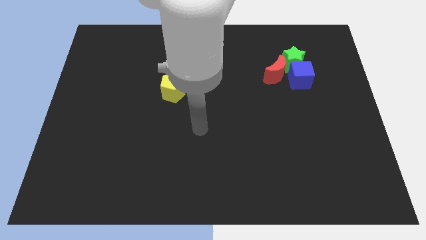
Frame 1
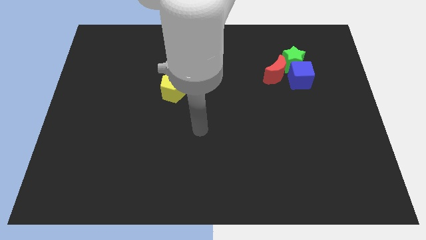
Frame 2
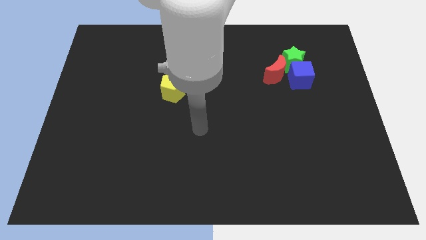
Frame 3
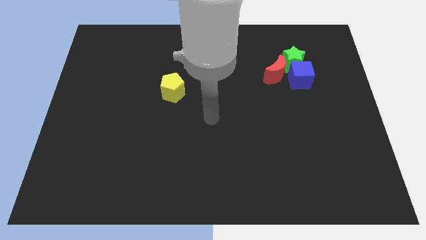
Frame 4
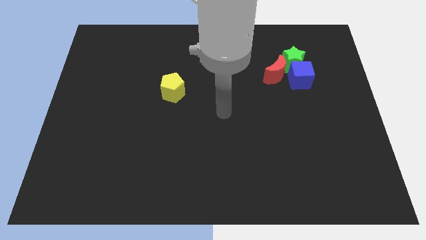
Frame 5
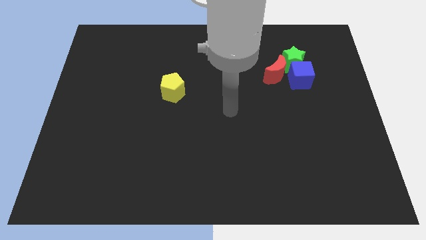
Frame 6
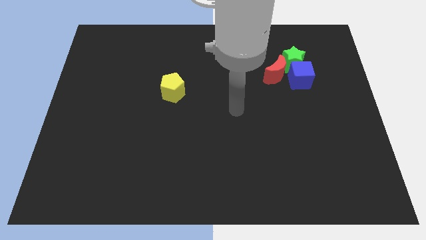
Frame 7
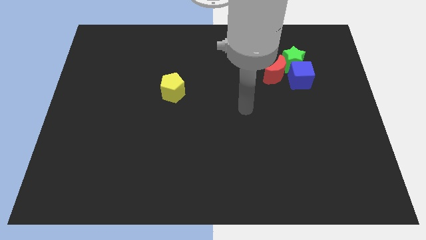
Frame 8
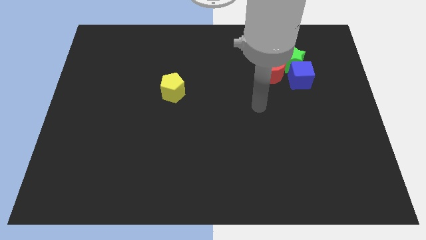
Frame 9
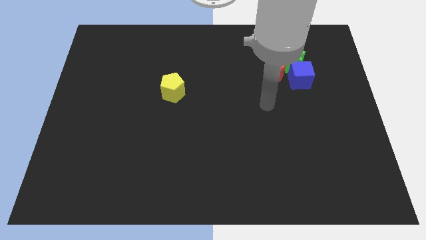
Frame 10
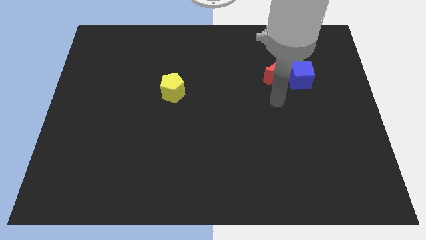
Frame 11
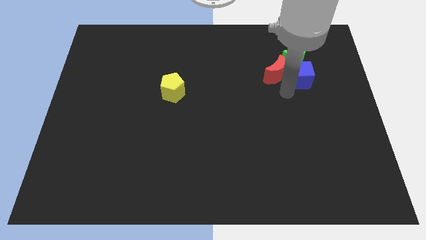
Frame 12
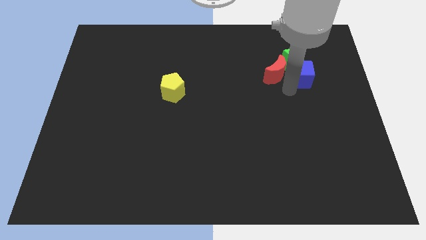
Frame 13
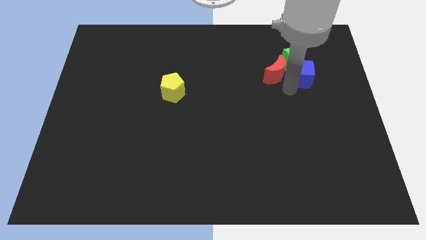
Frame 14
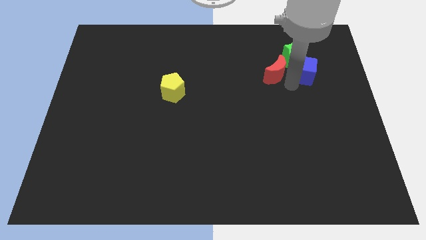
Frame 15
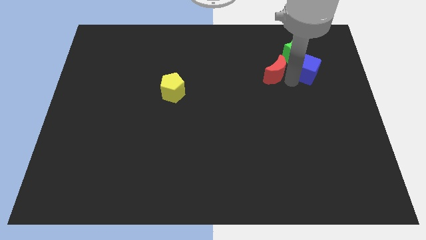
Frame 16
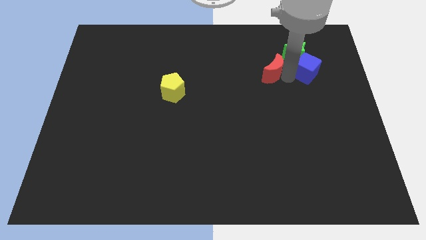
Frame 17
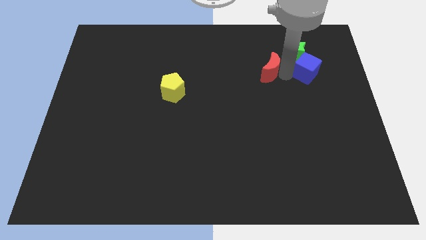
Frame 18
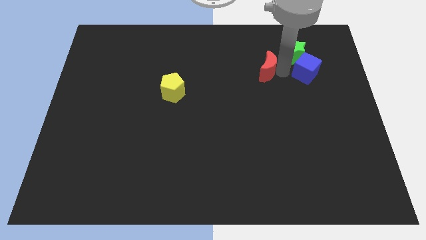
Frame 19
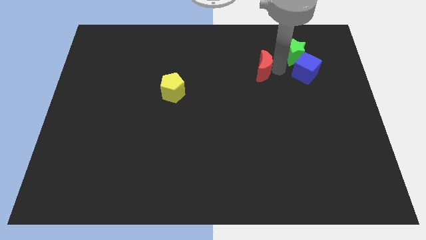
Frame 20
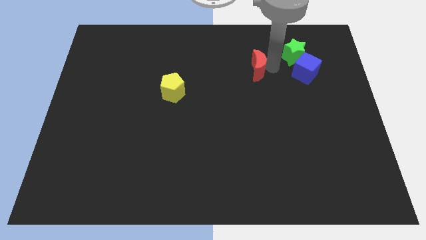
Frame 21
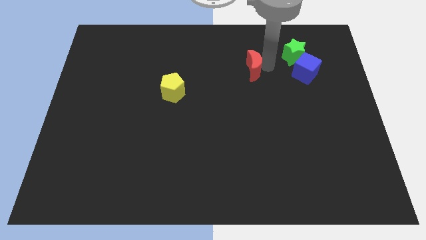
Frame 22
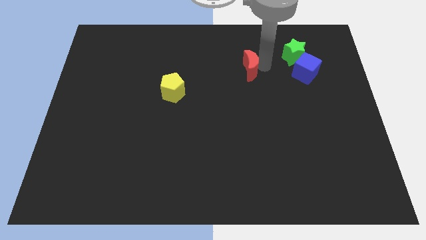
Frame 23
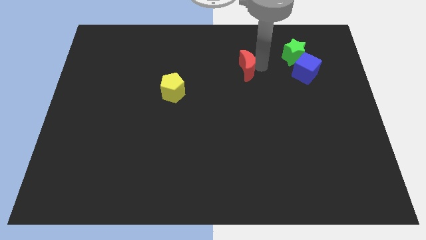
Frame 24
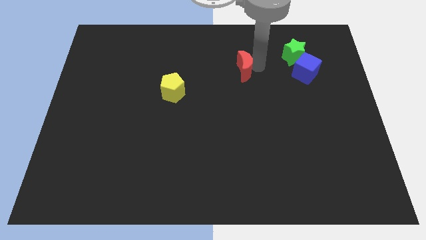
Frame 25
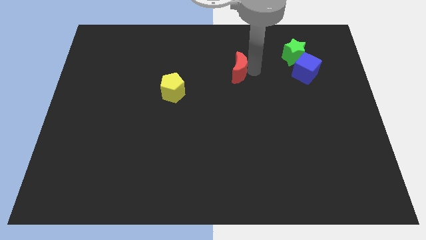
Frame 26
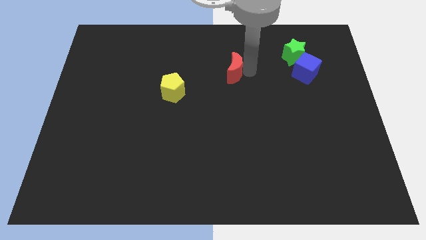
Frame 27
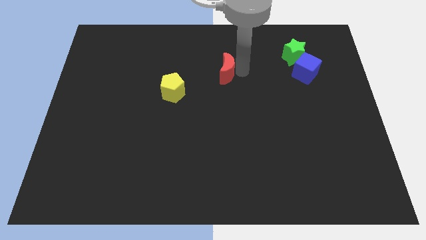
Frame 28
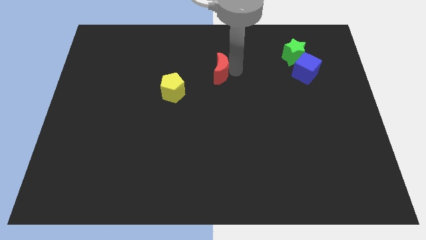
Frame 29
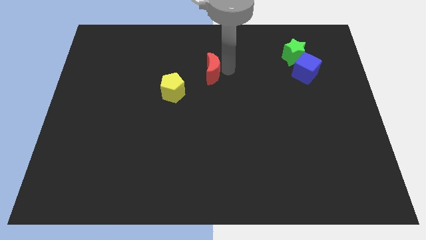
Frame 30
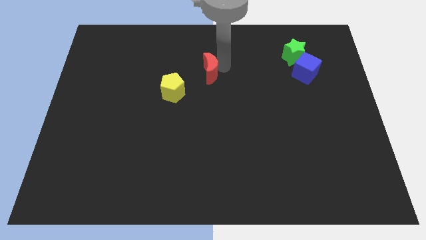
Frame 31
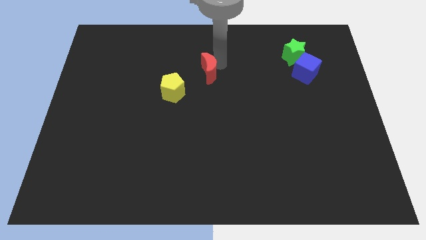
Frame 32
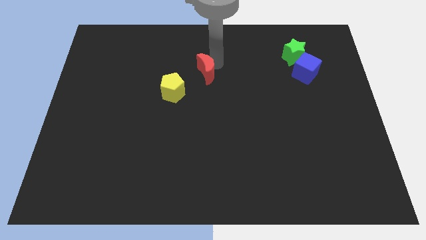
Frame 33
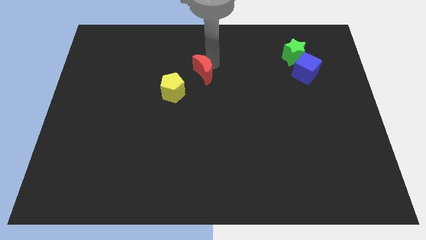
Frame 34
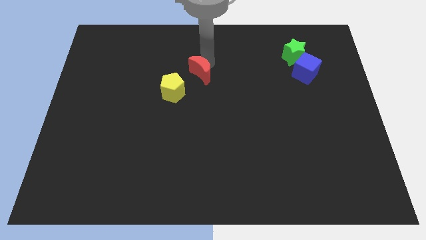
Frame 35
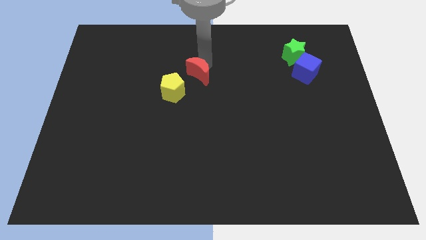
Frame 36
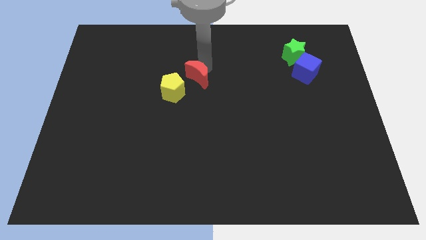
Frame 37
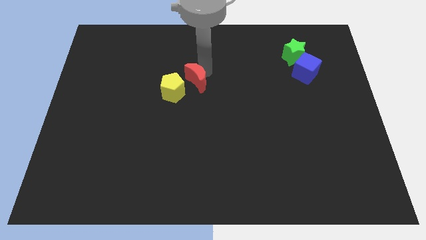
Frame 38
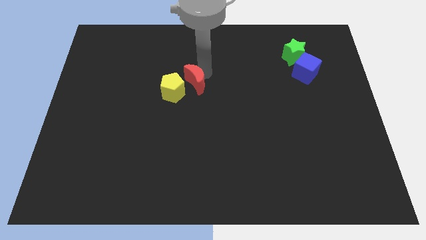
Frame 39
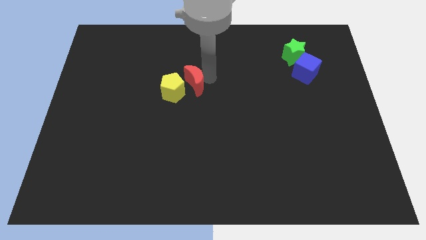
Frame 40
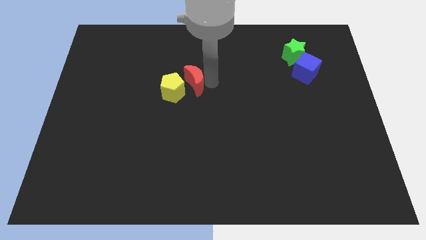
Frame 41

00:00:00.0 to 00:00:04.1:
push the red moon to the yellow block

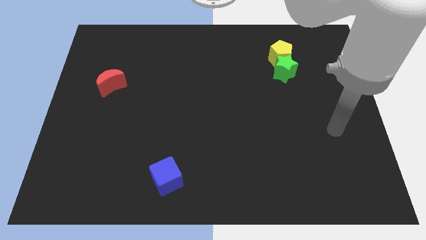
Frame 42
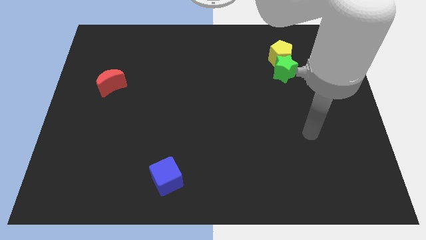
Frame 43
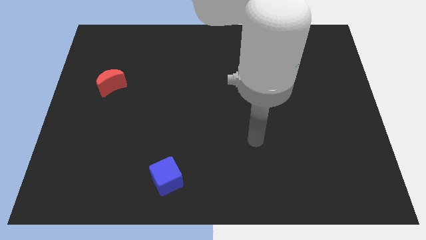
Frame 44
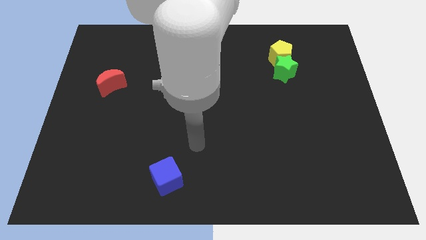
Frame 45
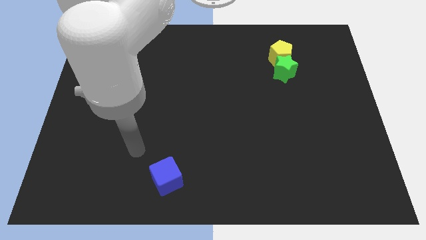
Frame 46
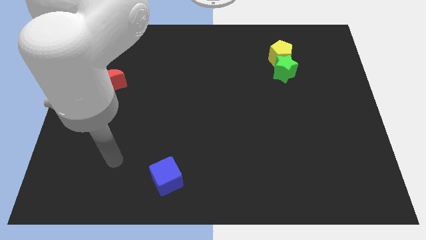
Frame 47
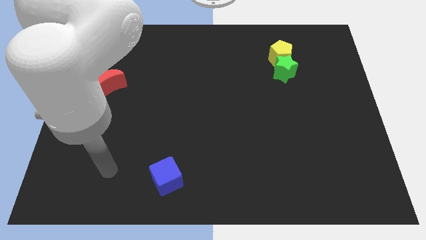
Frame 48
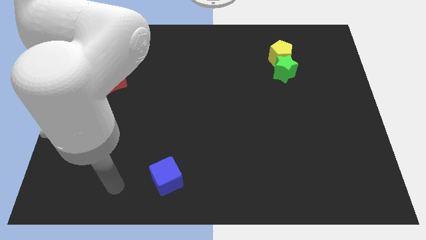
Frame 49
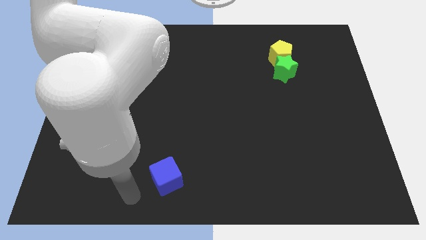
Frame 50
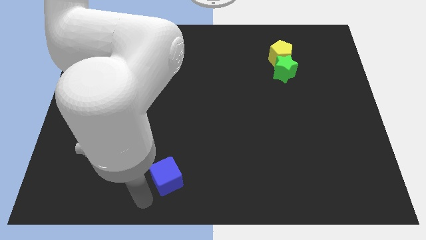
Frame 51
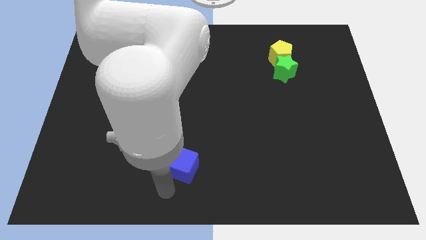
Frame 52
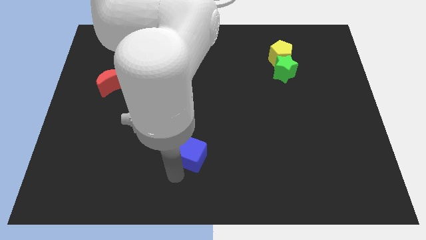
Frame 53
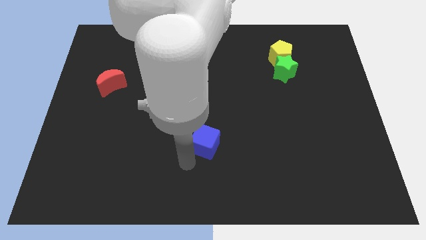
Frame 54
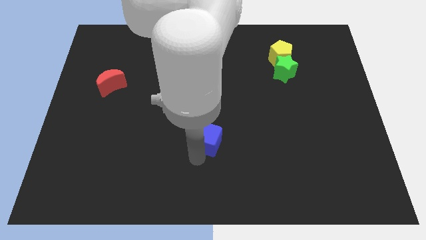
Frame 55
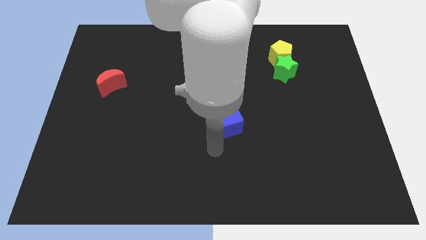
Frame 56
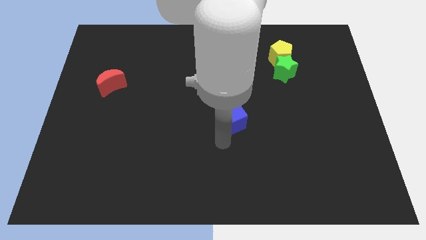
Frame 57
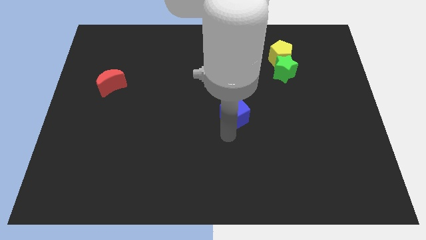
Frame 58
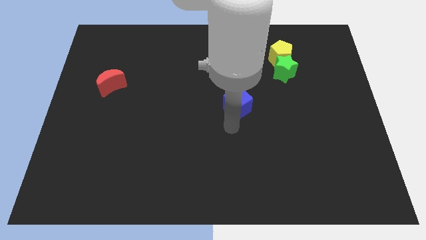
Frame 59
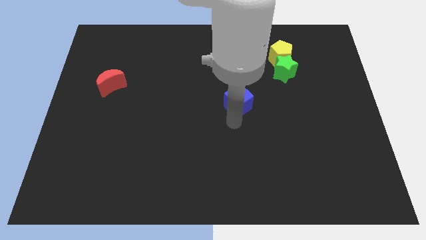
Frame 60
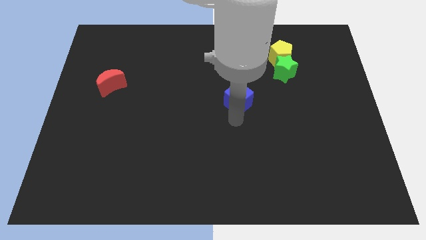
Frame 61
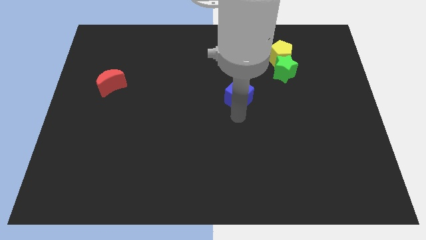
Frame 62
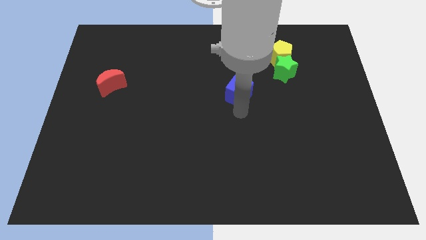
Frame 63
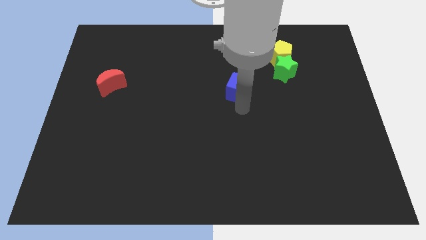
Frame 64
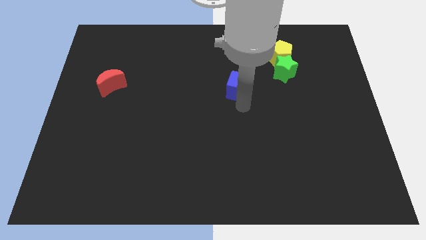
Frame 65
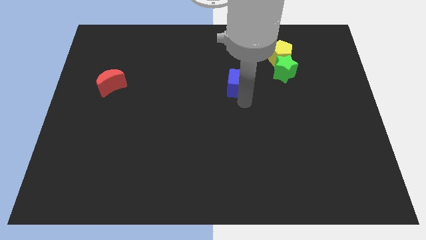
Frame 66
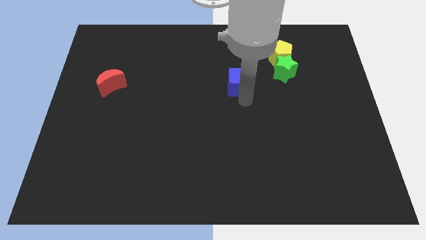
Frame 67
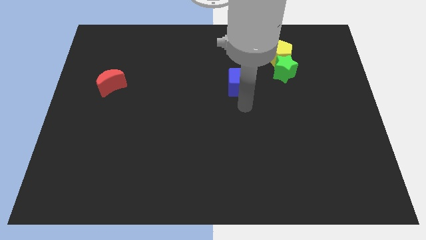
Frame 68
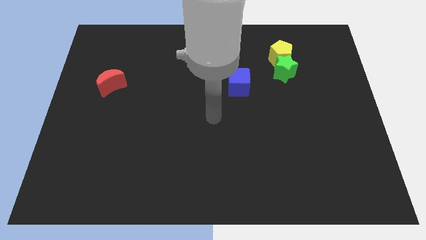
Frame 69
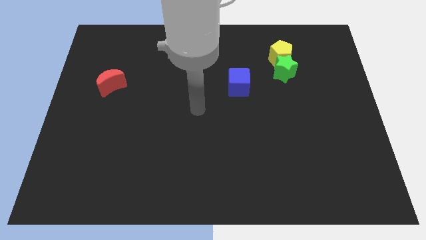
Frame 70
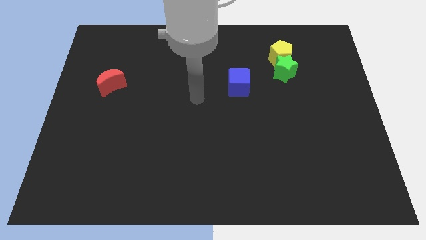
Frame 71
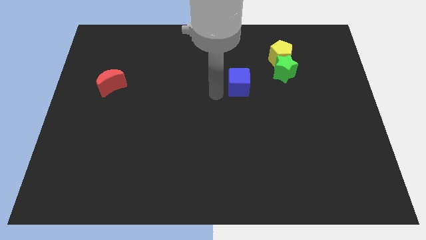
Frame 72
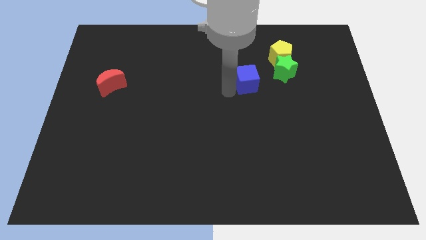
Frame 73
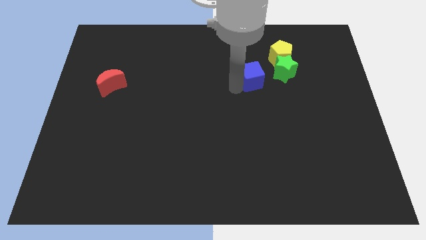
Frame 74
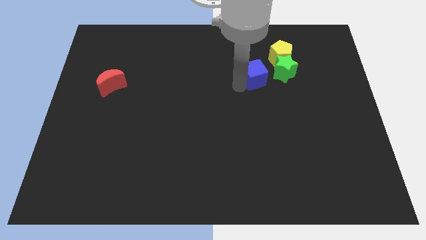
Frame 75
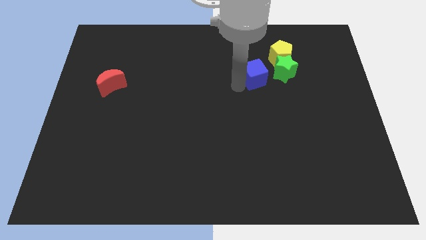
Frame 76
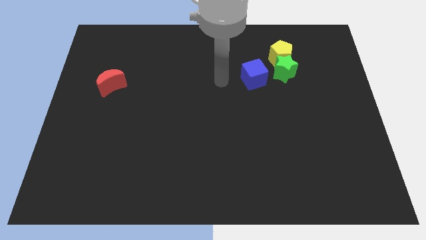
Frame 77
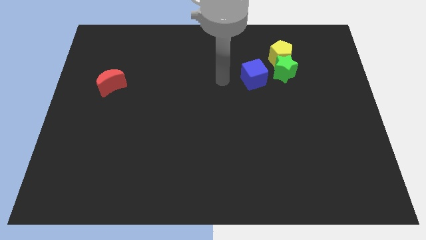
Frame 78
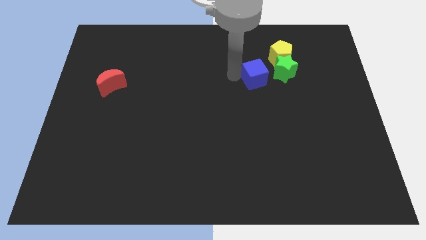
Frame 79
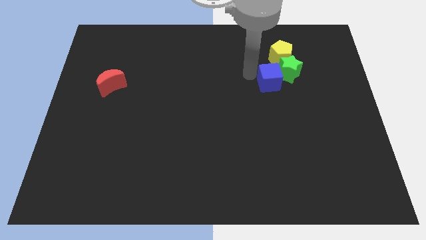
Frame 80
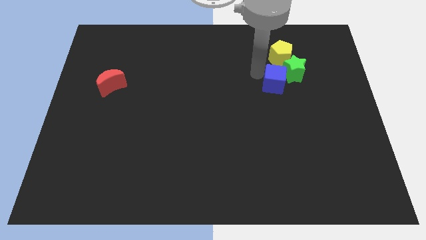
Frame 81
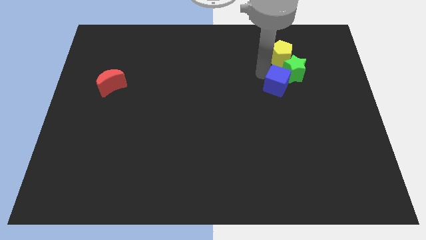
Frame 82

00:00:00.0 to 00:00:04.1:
move the cube close to the green block
